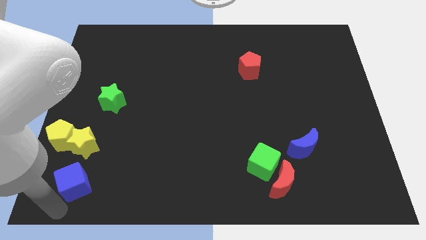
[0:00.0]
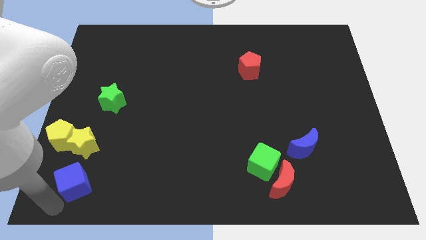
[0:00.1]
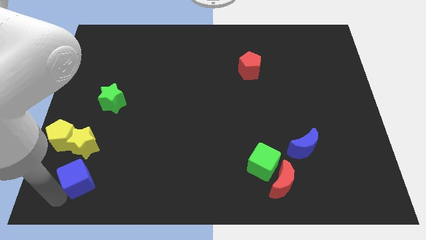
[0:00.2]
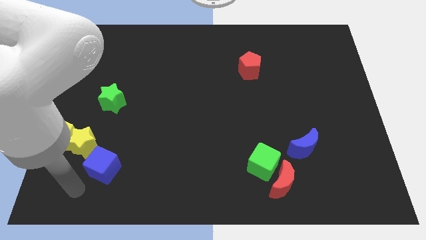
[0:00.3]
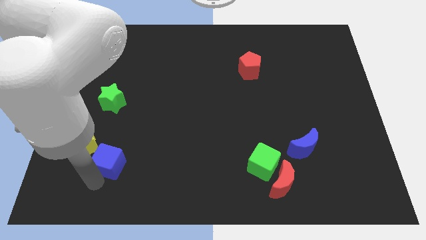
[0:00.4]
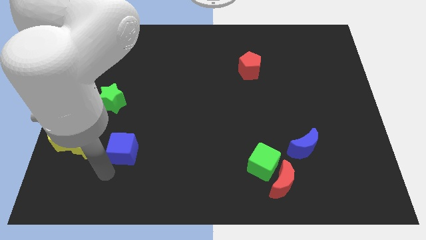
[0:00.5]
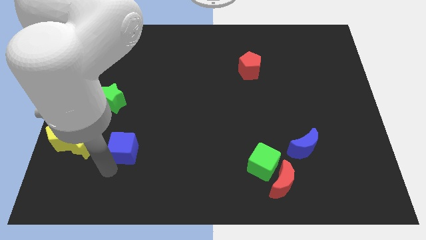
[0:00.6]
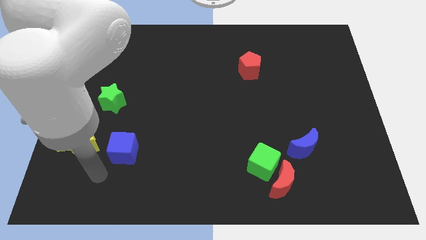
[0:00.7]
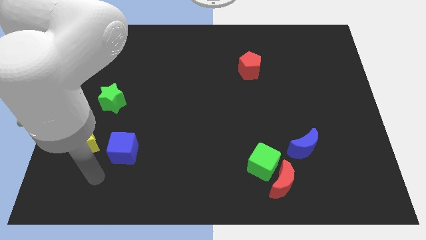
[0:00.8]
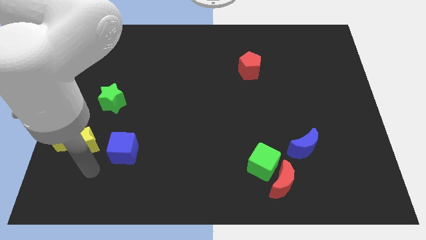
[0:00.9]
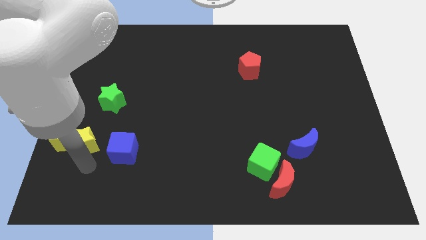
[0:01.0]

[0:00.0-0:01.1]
place blue cube to the right of yellow star

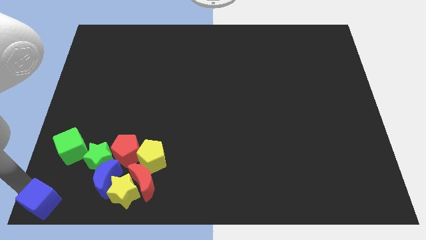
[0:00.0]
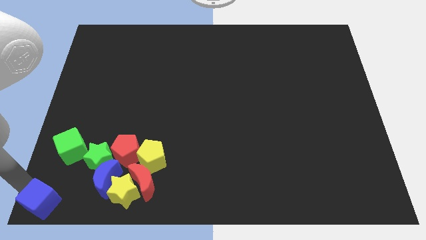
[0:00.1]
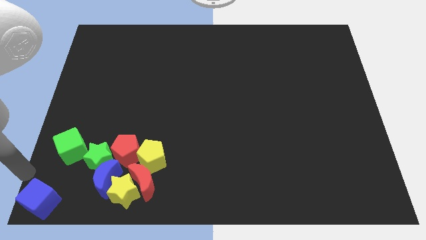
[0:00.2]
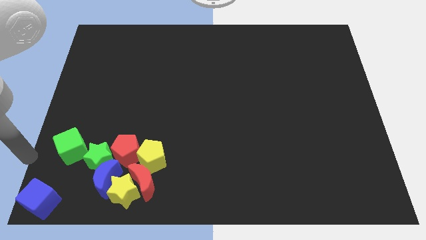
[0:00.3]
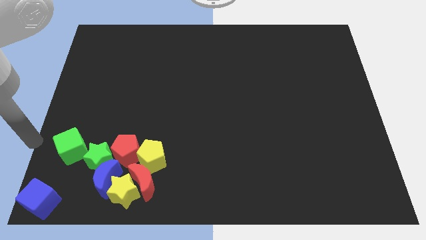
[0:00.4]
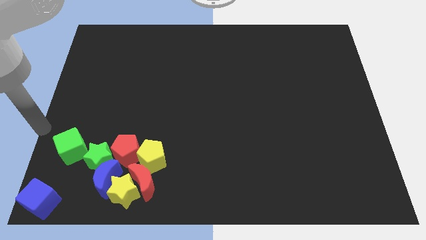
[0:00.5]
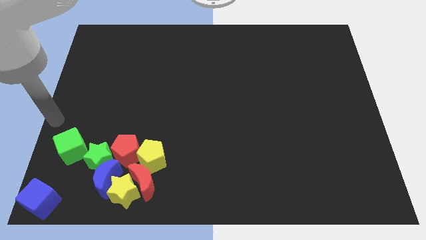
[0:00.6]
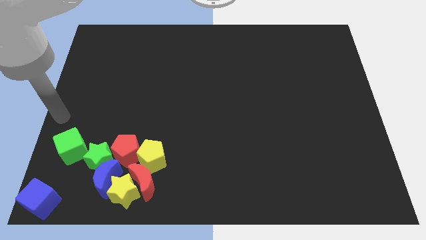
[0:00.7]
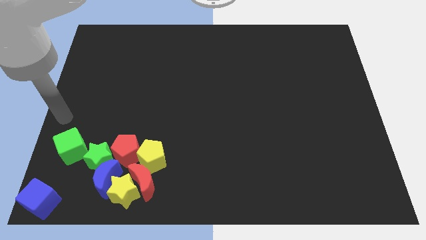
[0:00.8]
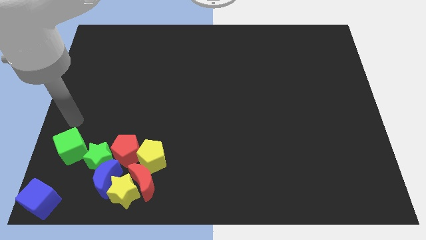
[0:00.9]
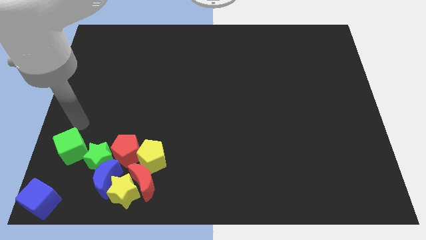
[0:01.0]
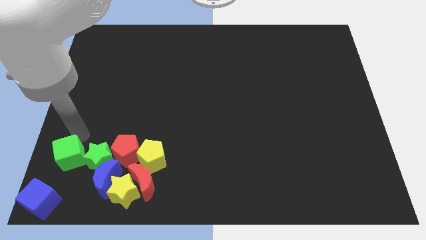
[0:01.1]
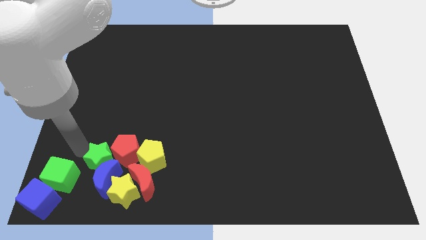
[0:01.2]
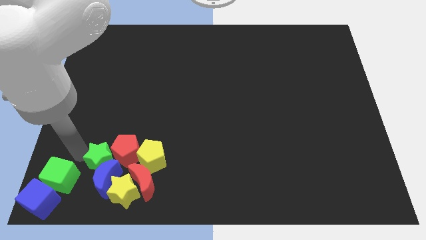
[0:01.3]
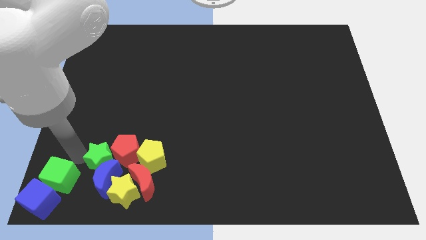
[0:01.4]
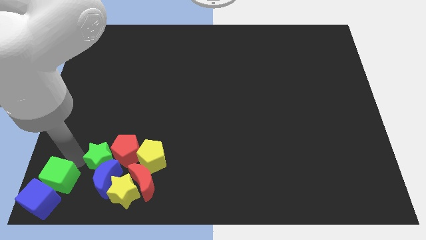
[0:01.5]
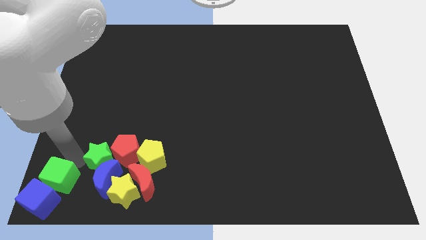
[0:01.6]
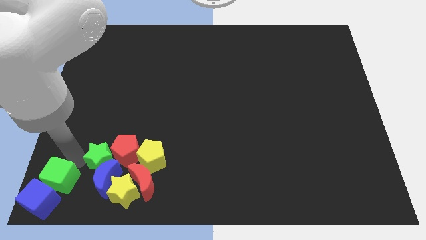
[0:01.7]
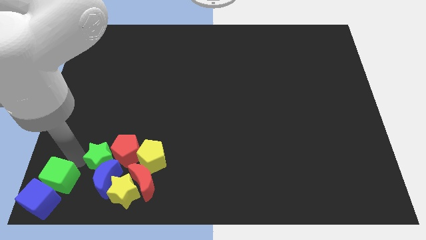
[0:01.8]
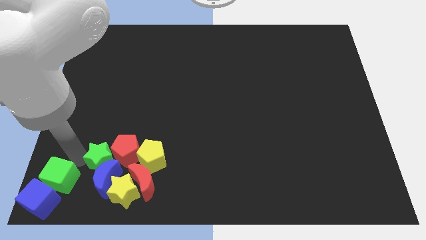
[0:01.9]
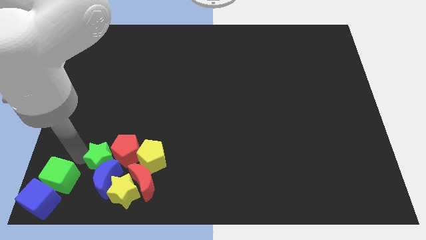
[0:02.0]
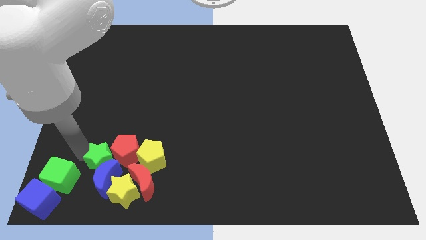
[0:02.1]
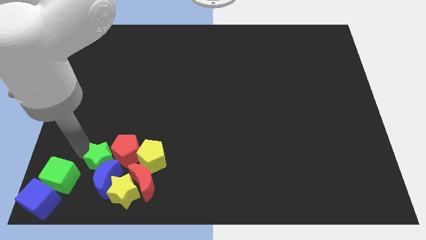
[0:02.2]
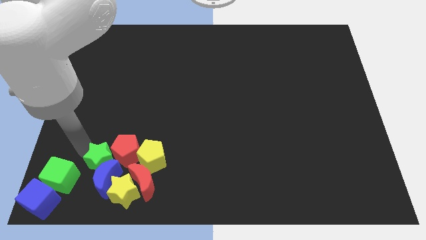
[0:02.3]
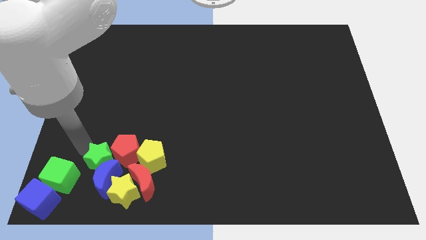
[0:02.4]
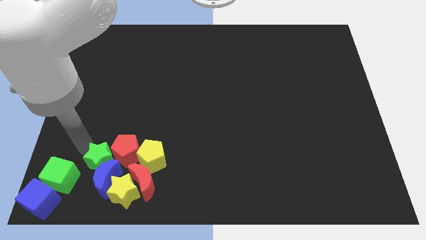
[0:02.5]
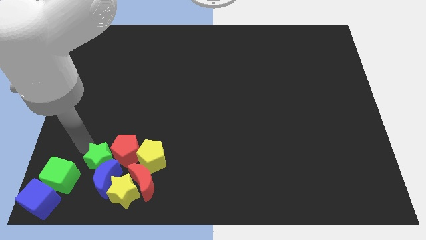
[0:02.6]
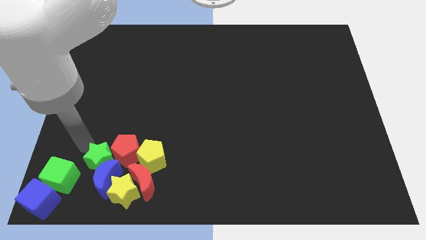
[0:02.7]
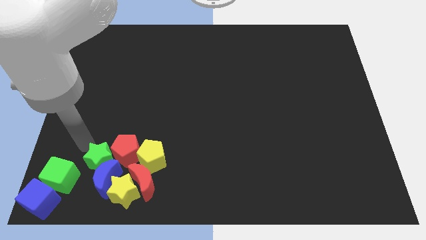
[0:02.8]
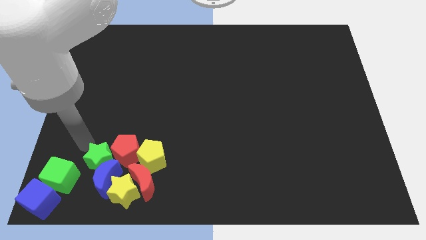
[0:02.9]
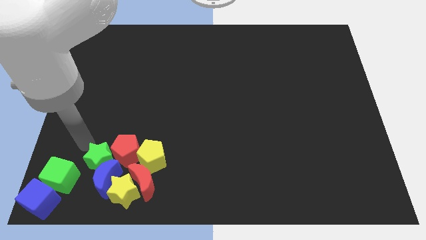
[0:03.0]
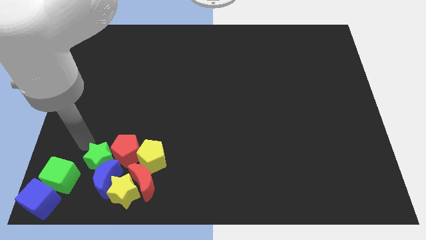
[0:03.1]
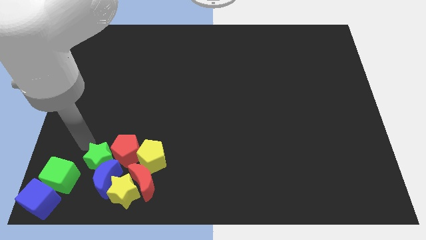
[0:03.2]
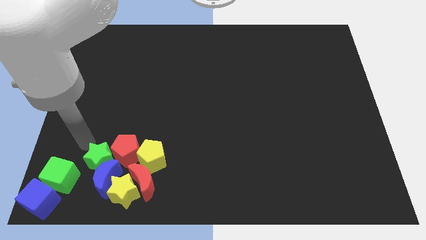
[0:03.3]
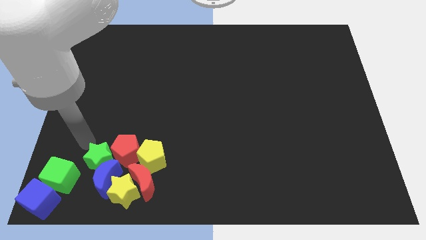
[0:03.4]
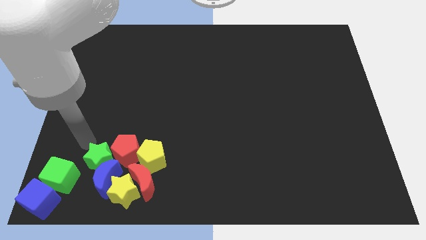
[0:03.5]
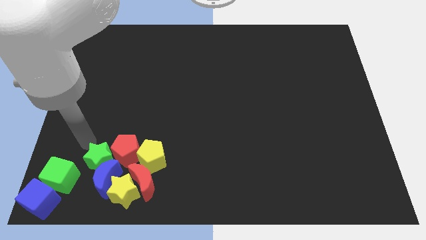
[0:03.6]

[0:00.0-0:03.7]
push the green cube towards the bottom left corner of the board

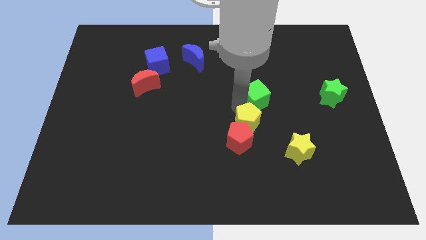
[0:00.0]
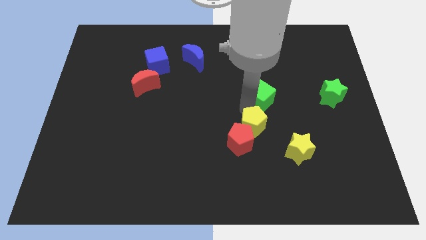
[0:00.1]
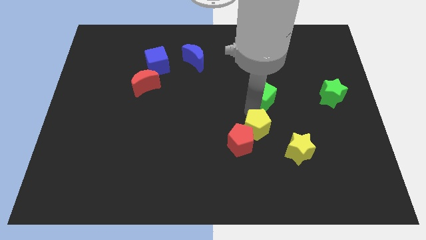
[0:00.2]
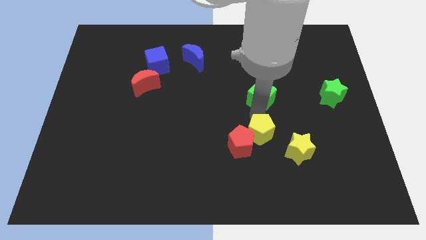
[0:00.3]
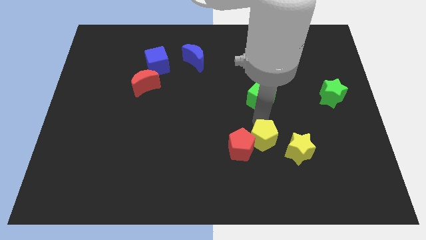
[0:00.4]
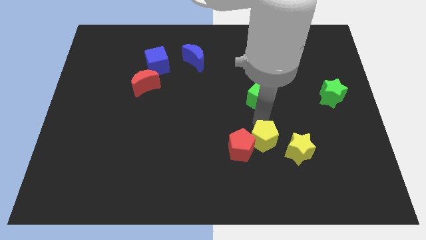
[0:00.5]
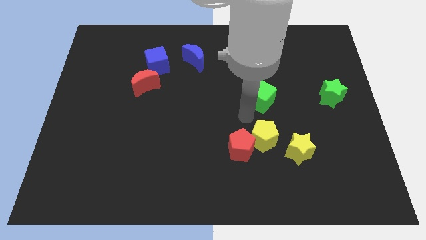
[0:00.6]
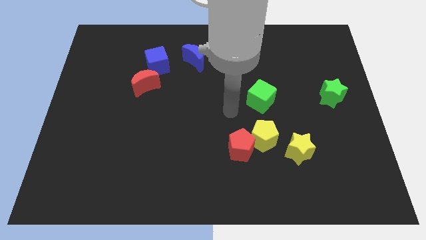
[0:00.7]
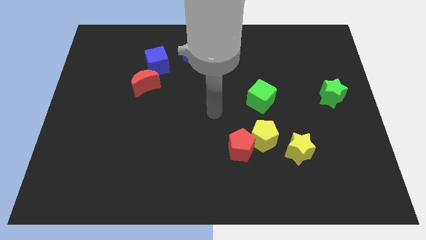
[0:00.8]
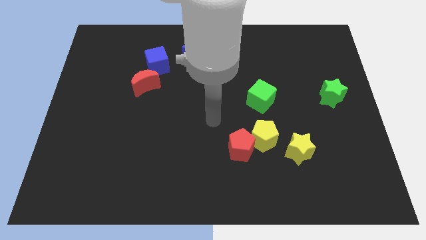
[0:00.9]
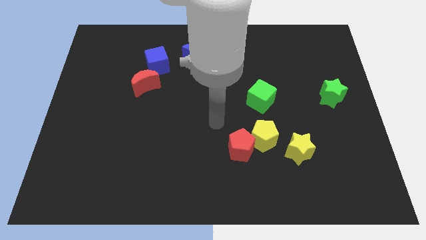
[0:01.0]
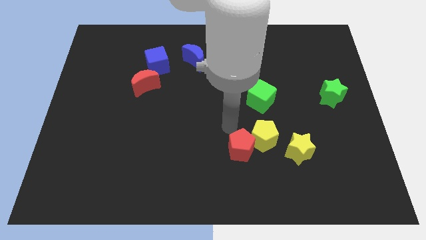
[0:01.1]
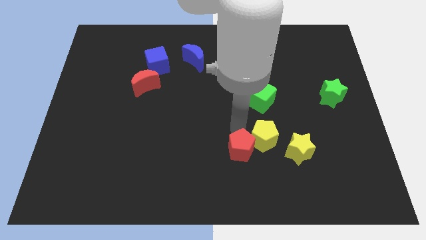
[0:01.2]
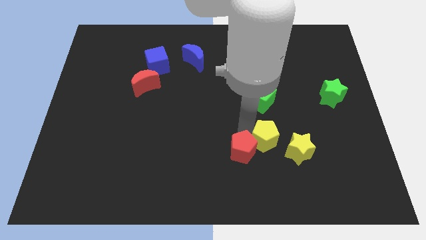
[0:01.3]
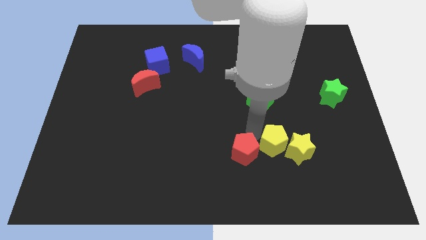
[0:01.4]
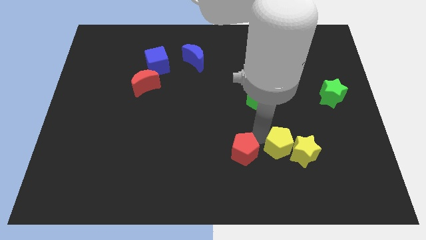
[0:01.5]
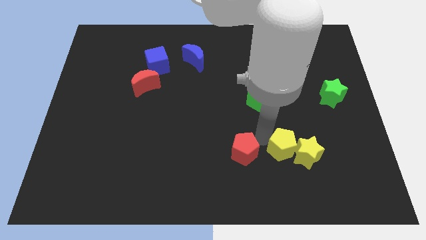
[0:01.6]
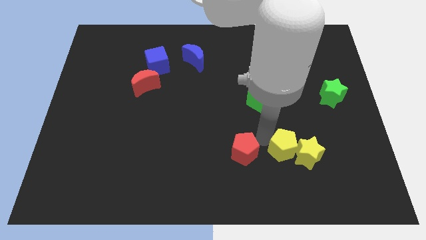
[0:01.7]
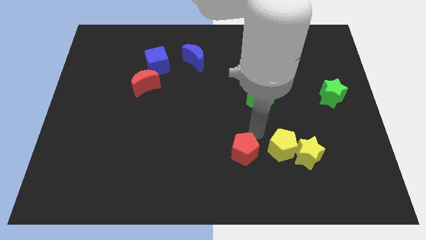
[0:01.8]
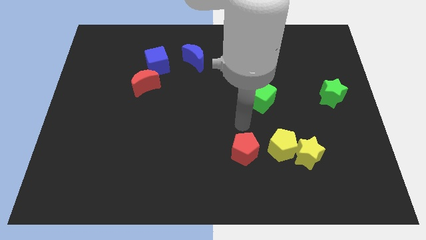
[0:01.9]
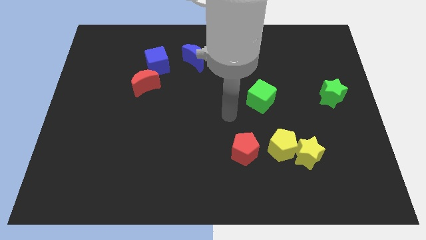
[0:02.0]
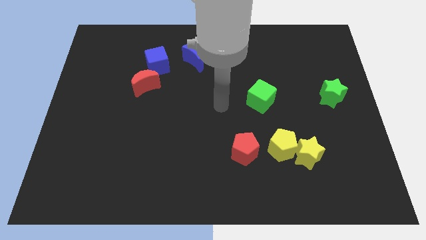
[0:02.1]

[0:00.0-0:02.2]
separate red pentagon and yellow pentagon

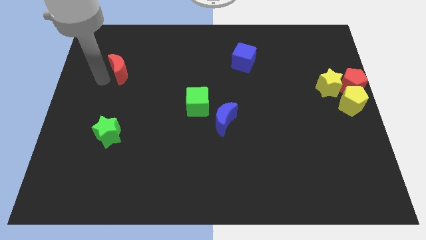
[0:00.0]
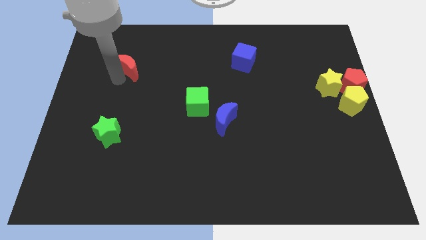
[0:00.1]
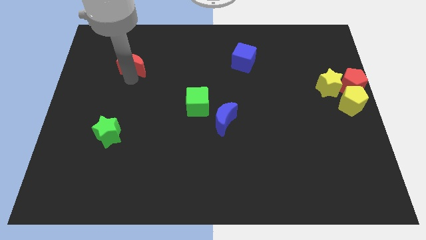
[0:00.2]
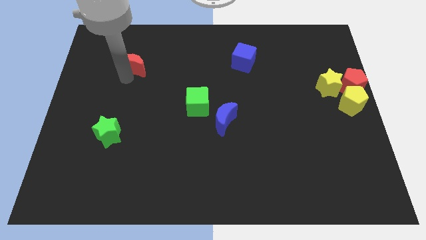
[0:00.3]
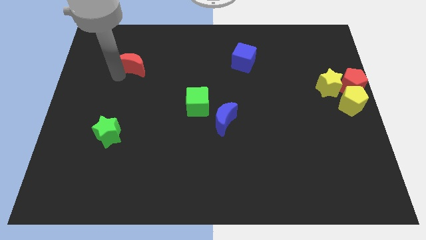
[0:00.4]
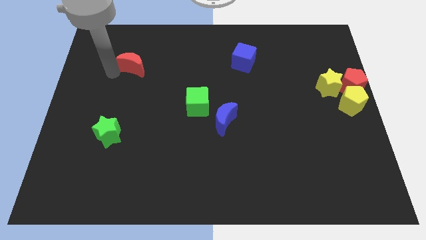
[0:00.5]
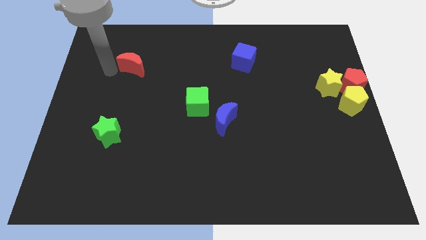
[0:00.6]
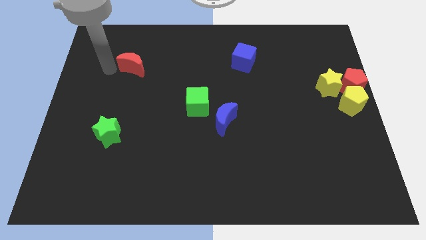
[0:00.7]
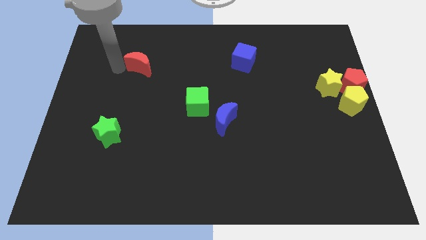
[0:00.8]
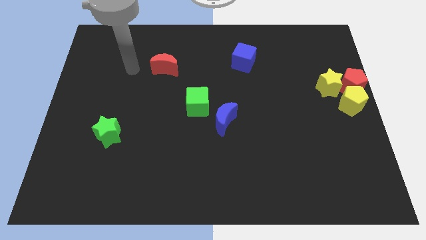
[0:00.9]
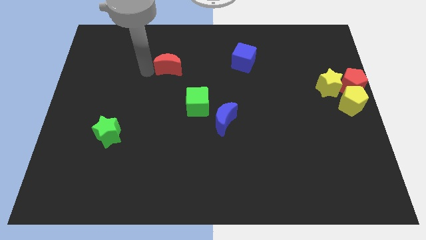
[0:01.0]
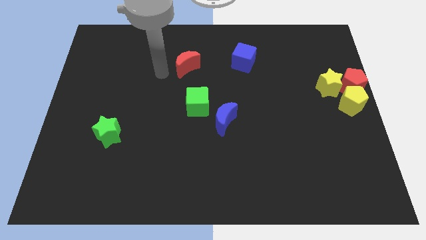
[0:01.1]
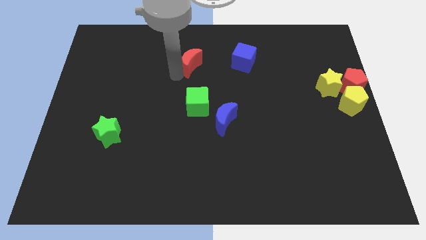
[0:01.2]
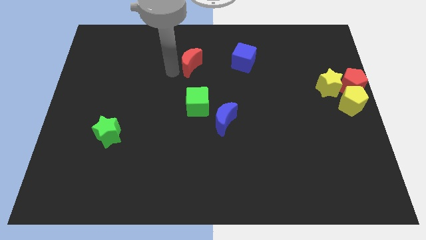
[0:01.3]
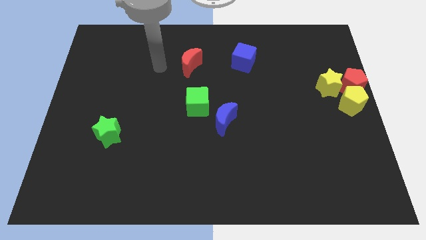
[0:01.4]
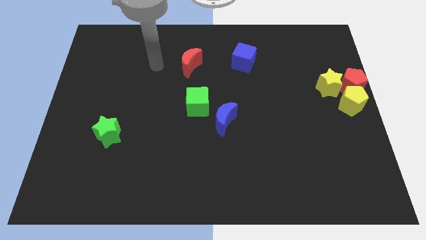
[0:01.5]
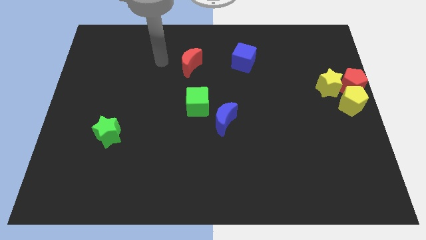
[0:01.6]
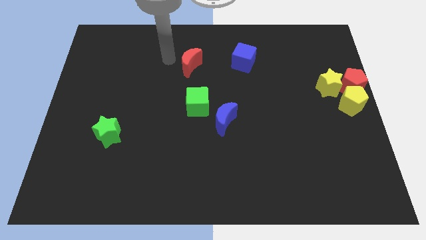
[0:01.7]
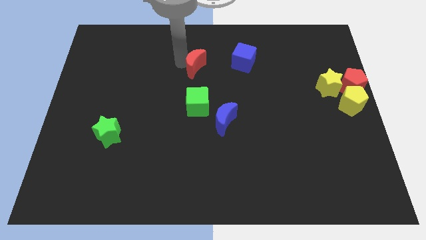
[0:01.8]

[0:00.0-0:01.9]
drag the red crescent to the left side of the blue cube

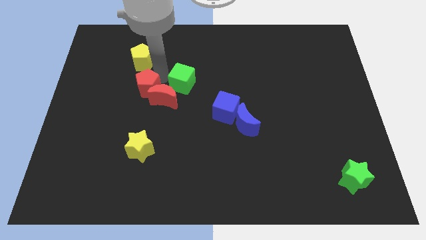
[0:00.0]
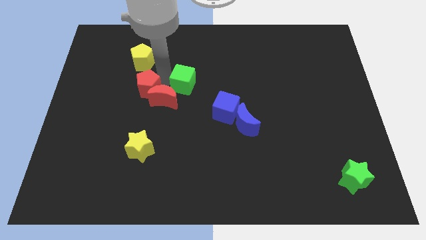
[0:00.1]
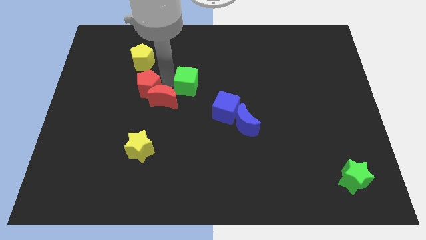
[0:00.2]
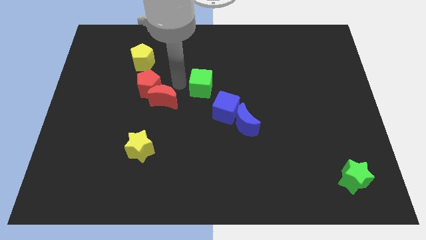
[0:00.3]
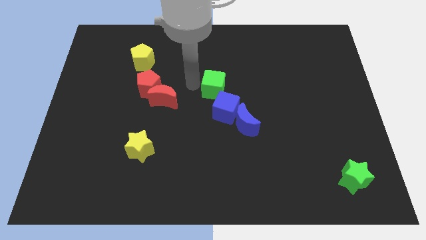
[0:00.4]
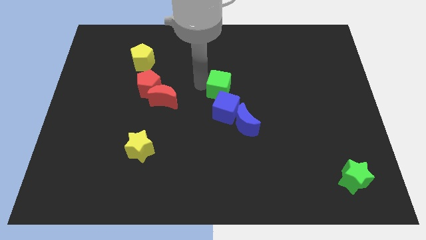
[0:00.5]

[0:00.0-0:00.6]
place the green cube above the blue cube
